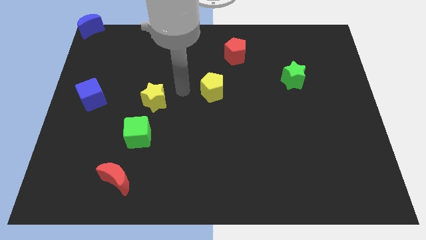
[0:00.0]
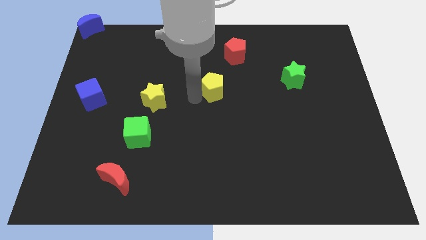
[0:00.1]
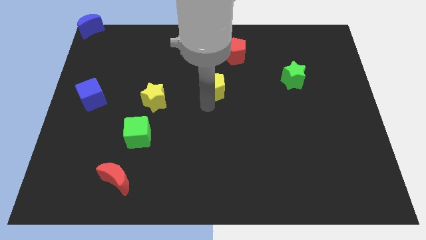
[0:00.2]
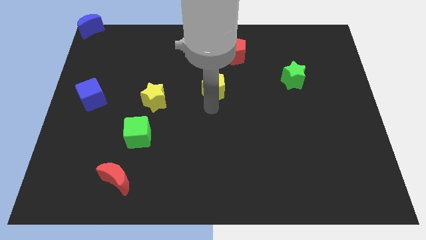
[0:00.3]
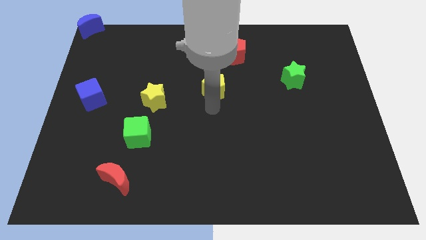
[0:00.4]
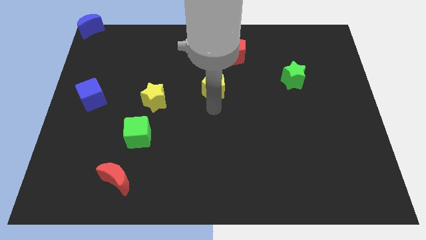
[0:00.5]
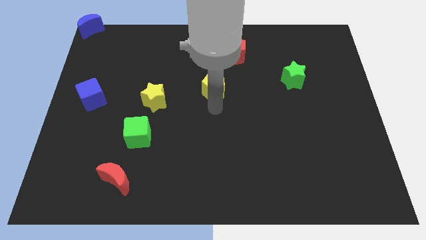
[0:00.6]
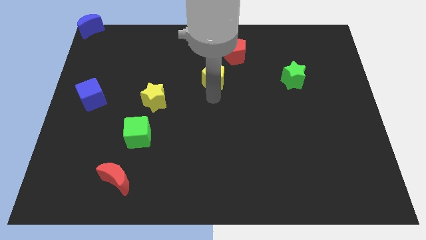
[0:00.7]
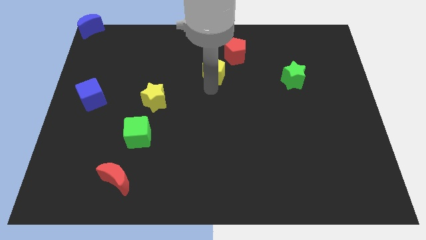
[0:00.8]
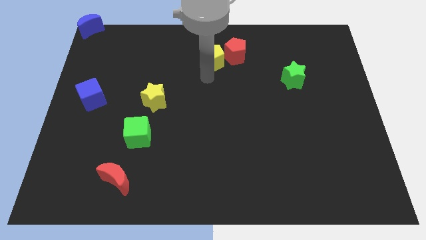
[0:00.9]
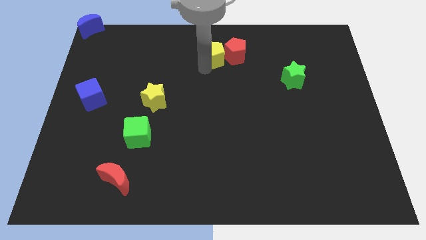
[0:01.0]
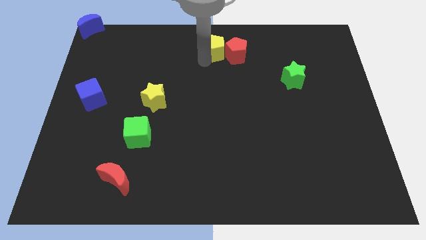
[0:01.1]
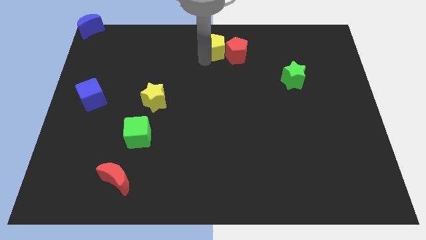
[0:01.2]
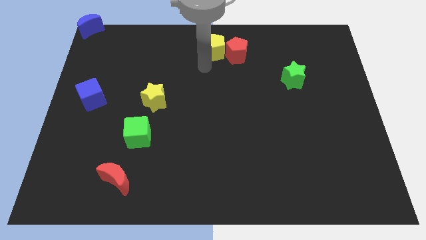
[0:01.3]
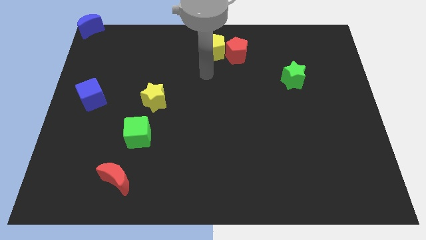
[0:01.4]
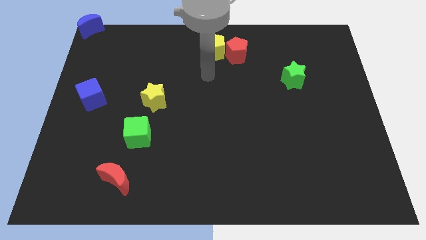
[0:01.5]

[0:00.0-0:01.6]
push the yellow pentagon into the red pentagon

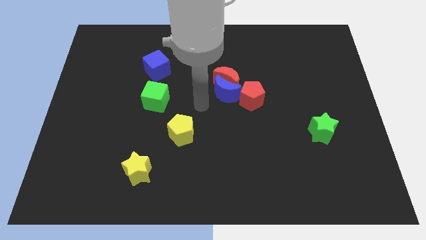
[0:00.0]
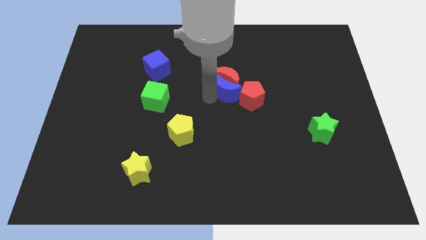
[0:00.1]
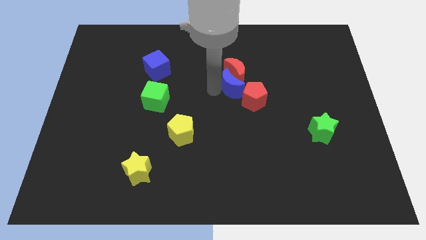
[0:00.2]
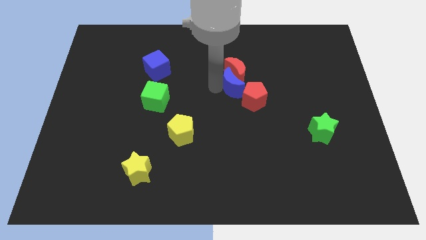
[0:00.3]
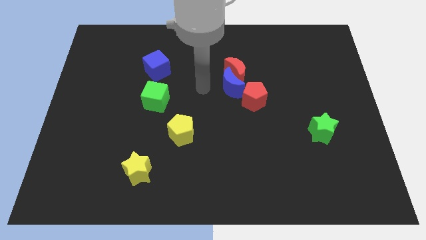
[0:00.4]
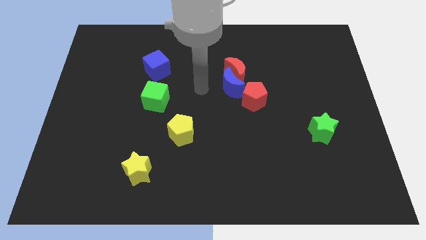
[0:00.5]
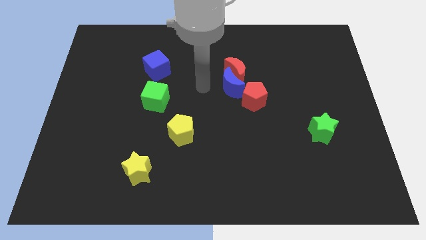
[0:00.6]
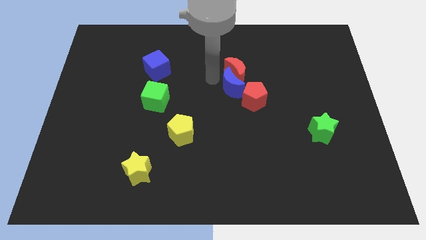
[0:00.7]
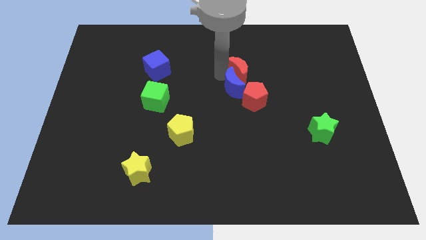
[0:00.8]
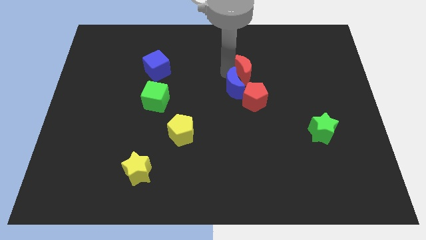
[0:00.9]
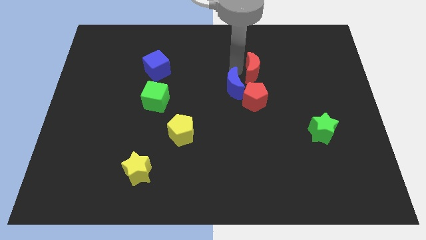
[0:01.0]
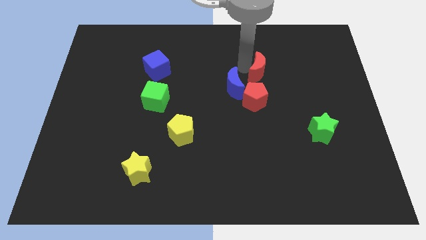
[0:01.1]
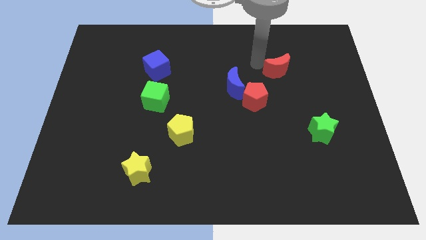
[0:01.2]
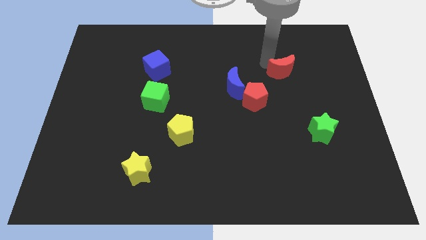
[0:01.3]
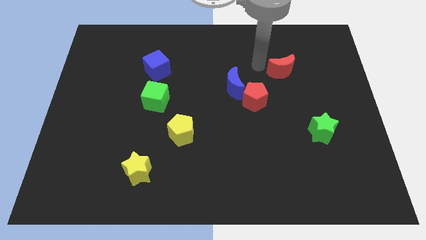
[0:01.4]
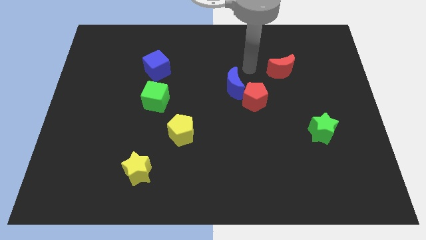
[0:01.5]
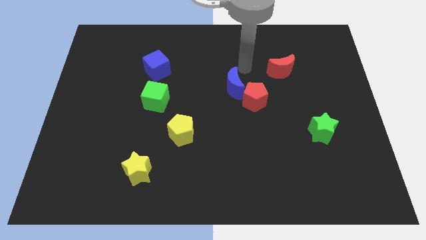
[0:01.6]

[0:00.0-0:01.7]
move red crescent away from the blue moon

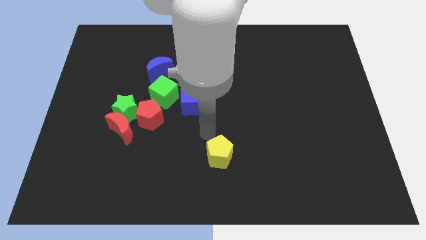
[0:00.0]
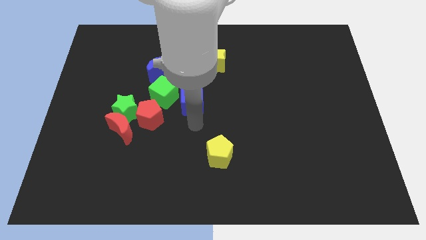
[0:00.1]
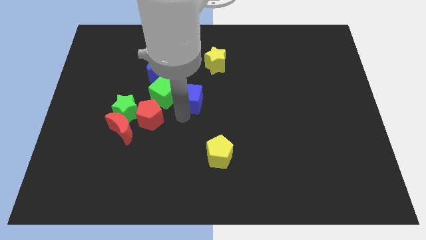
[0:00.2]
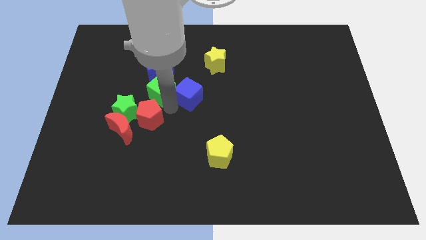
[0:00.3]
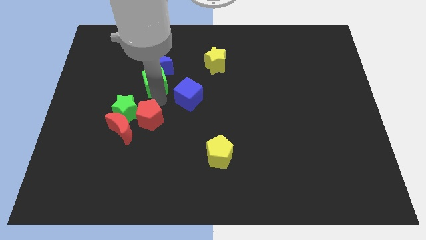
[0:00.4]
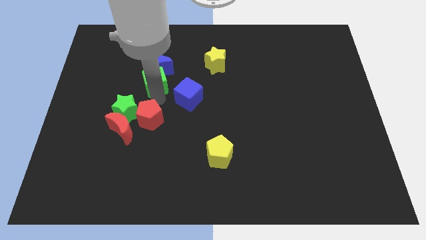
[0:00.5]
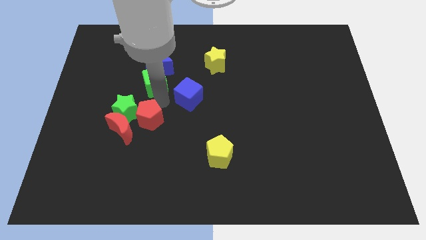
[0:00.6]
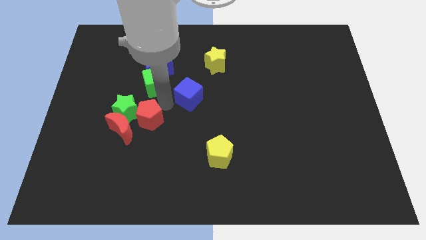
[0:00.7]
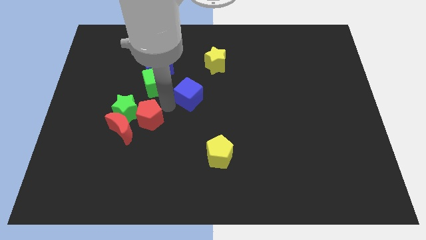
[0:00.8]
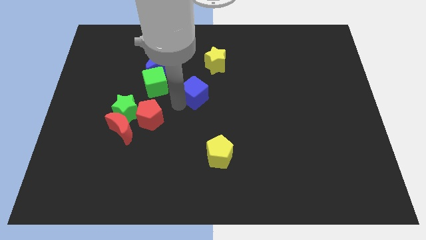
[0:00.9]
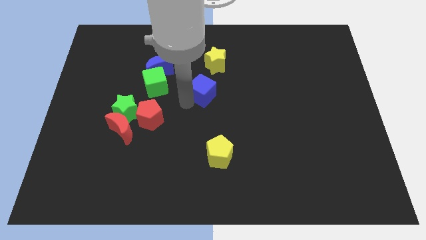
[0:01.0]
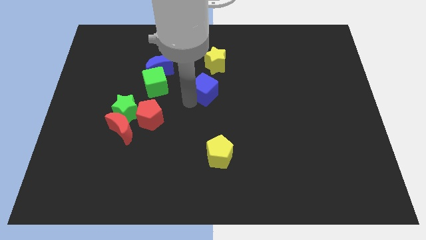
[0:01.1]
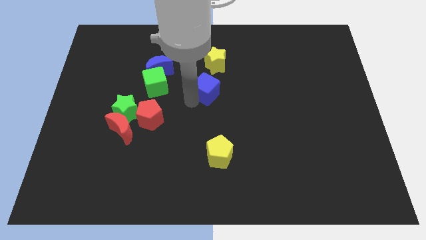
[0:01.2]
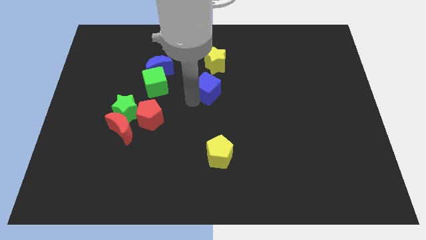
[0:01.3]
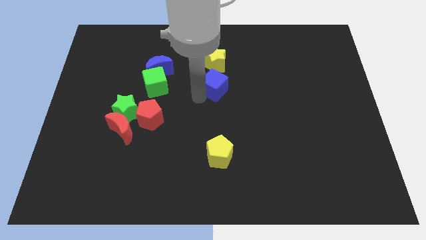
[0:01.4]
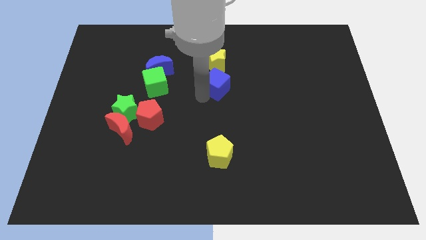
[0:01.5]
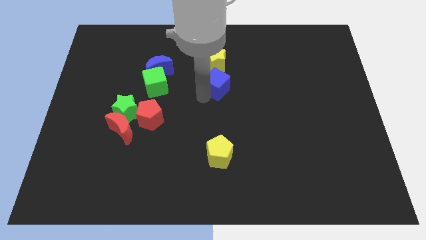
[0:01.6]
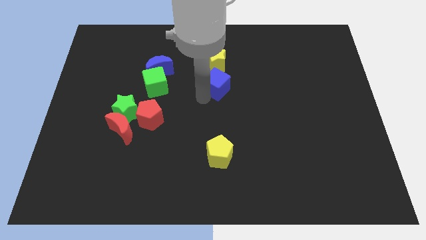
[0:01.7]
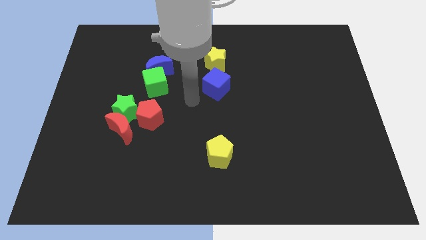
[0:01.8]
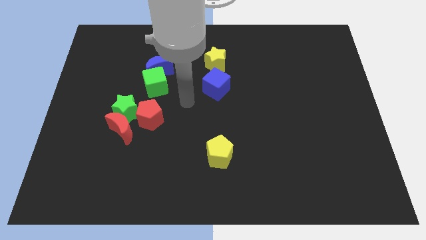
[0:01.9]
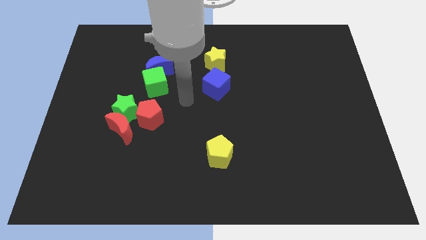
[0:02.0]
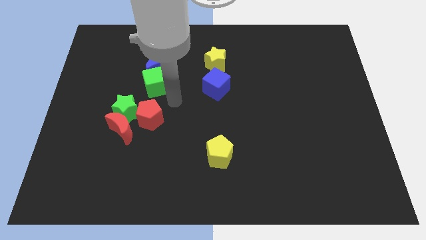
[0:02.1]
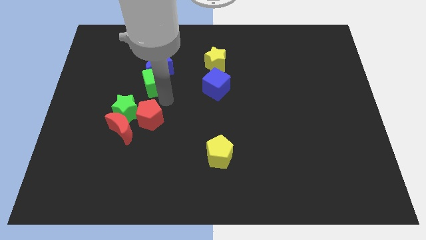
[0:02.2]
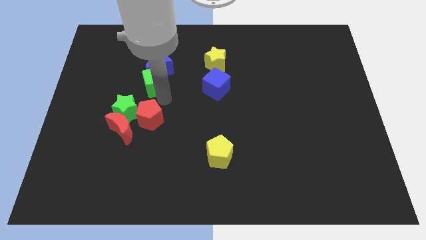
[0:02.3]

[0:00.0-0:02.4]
place blue cube to the bottom of yellow star

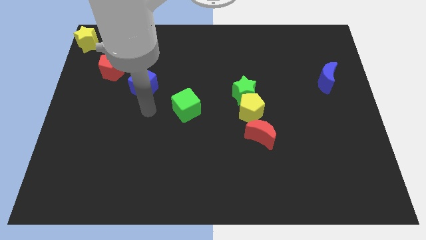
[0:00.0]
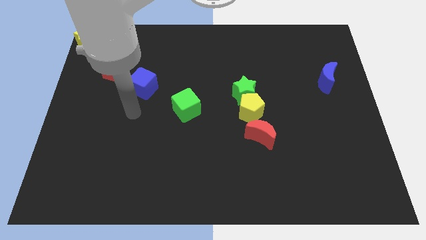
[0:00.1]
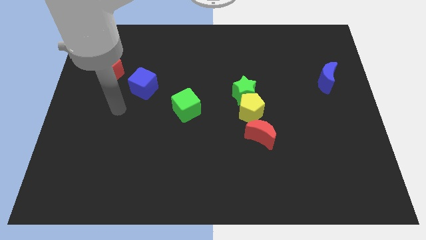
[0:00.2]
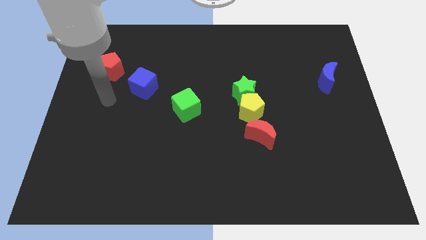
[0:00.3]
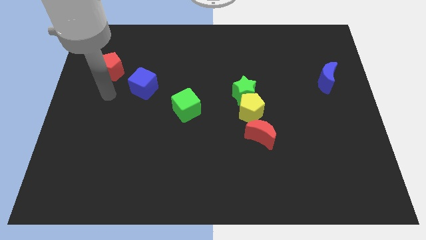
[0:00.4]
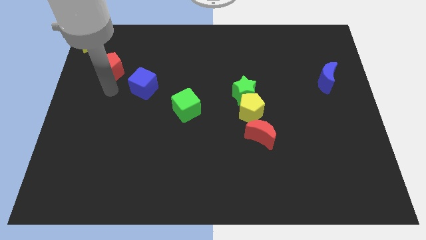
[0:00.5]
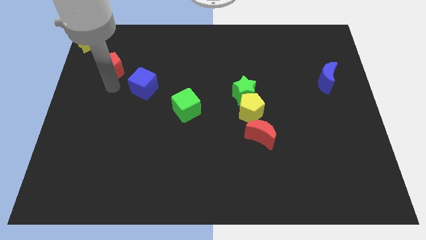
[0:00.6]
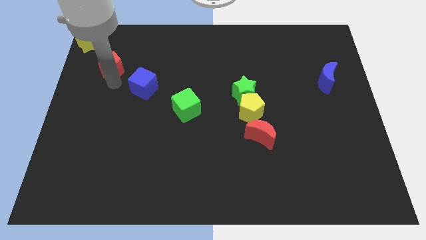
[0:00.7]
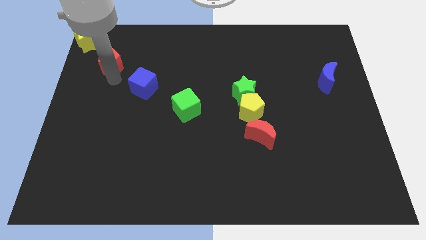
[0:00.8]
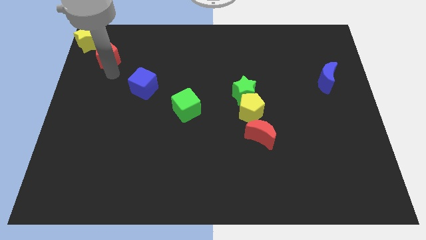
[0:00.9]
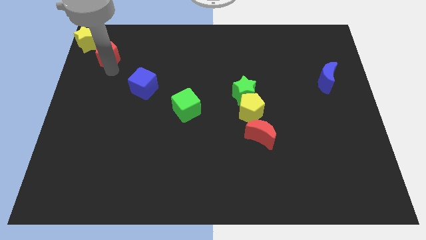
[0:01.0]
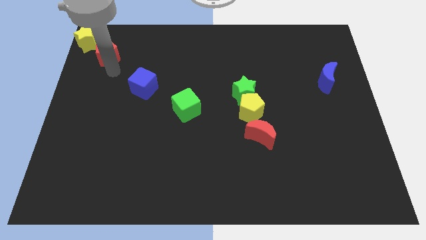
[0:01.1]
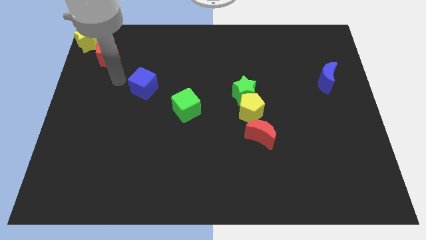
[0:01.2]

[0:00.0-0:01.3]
move the red pentagon slightly to the top

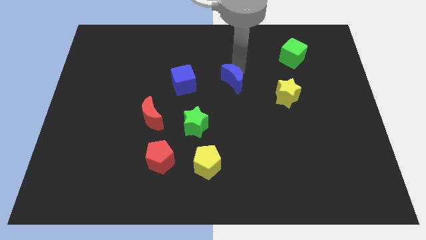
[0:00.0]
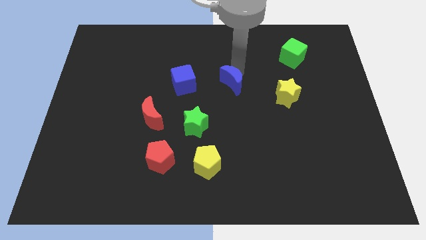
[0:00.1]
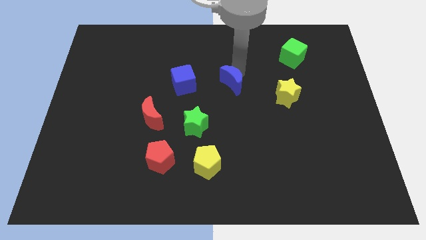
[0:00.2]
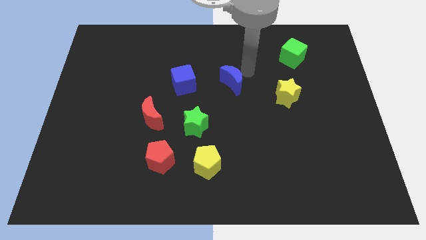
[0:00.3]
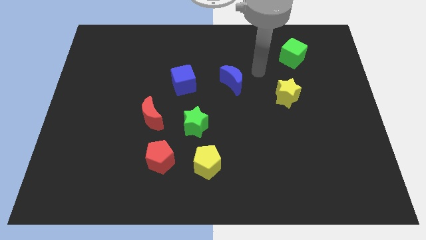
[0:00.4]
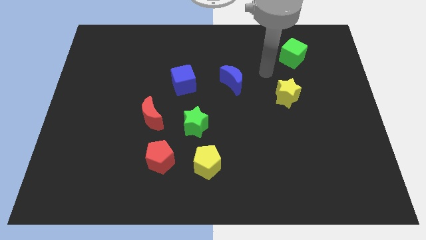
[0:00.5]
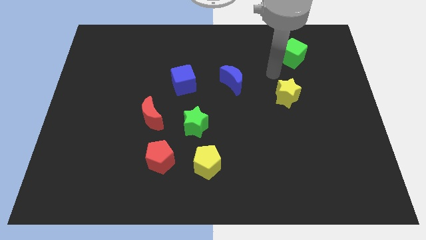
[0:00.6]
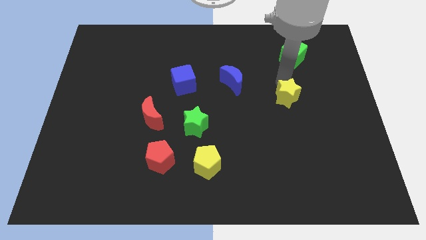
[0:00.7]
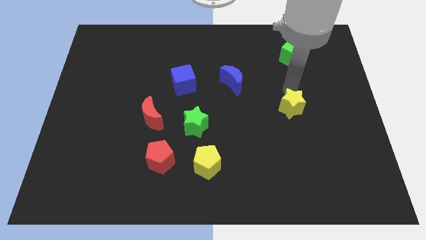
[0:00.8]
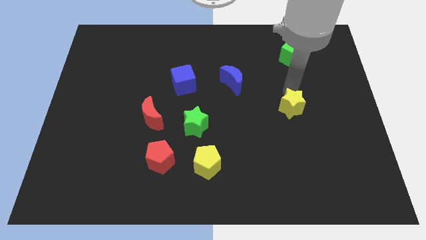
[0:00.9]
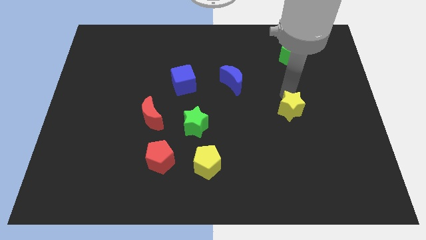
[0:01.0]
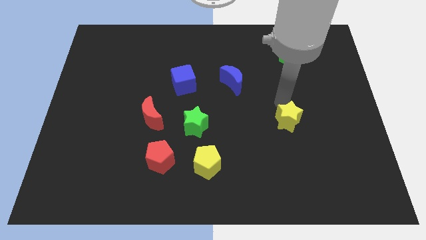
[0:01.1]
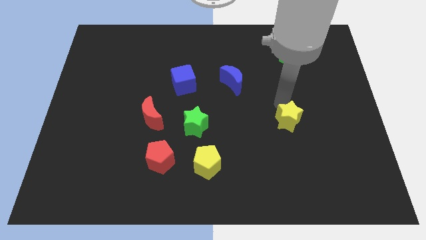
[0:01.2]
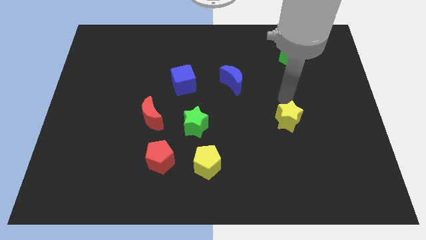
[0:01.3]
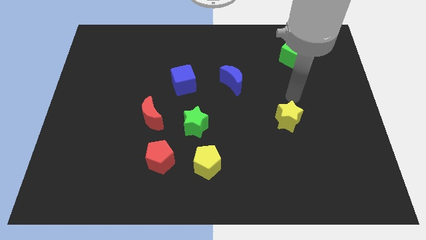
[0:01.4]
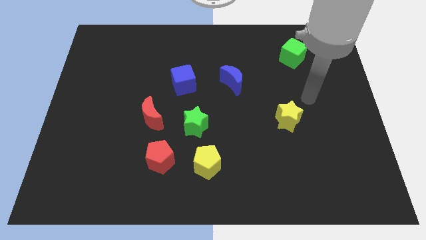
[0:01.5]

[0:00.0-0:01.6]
push yellow star downwards

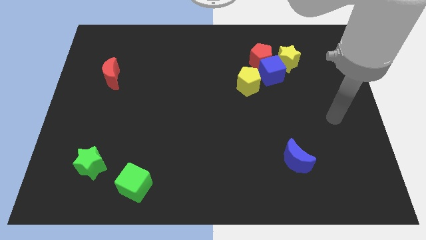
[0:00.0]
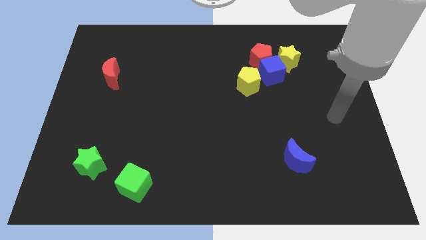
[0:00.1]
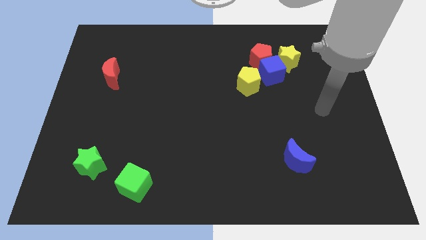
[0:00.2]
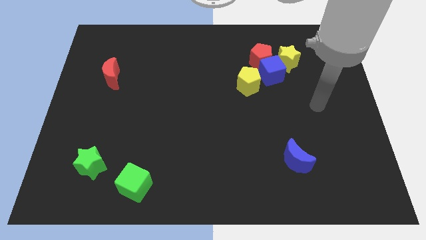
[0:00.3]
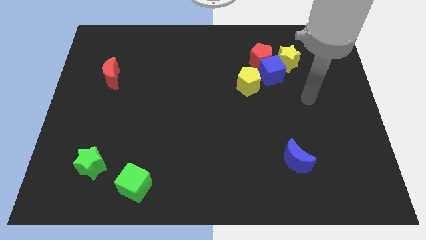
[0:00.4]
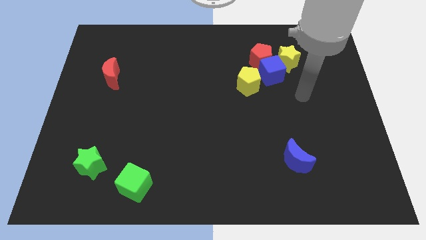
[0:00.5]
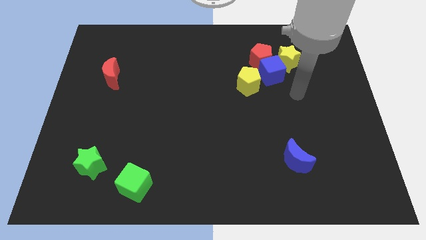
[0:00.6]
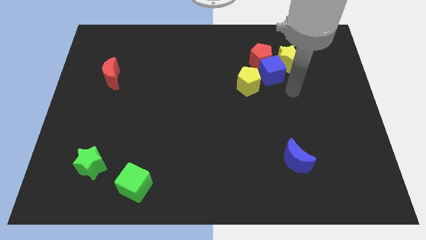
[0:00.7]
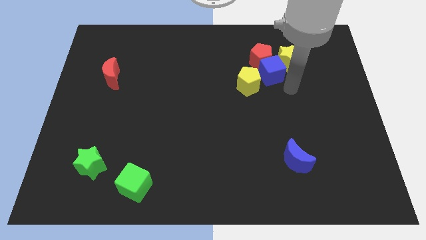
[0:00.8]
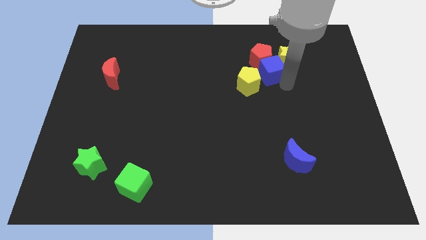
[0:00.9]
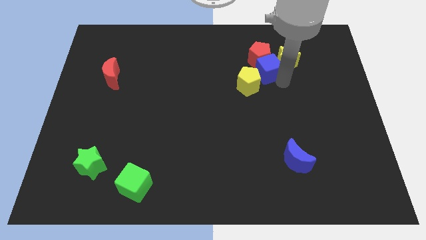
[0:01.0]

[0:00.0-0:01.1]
point your arm below blue cube
